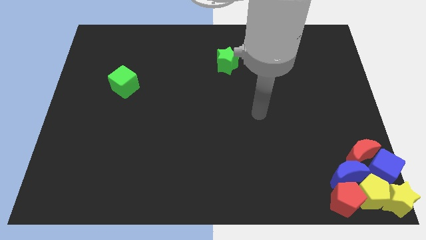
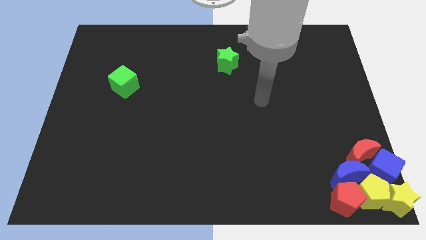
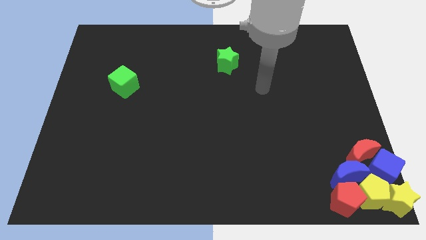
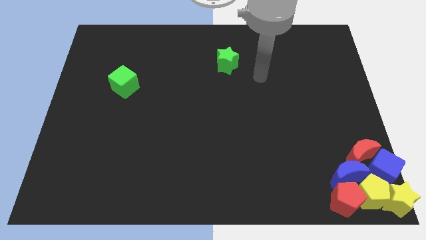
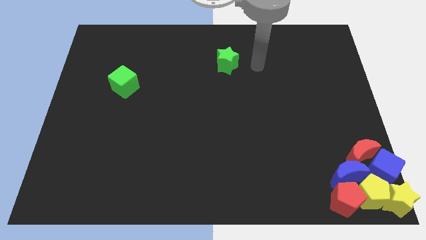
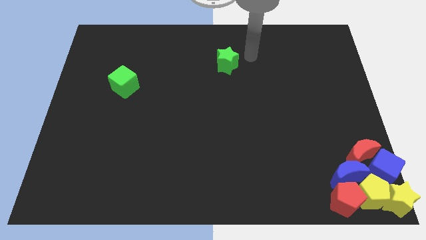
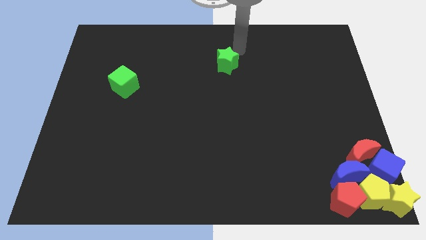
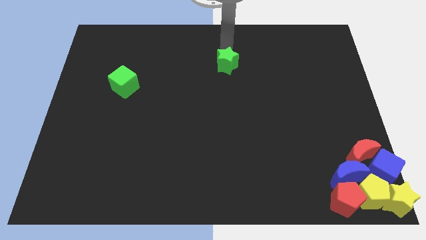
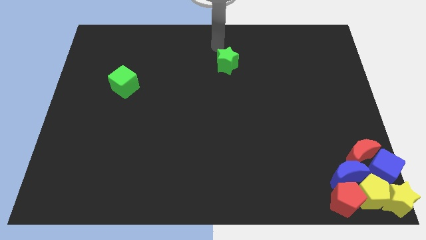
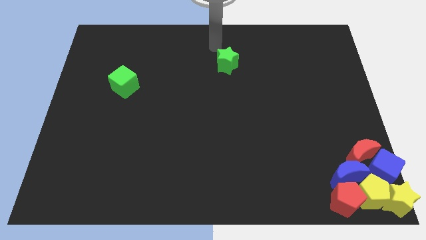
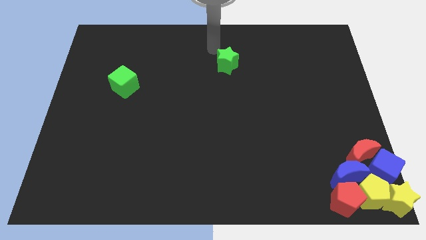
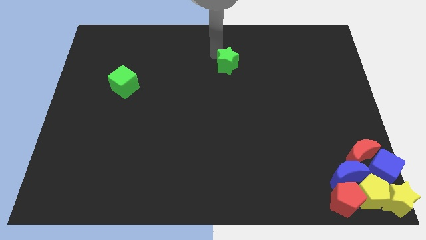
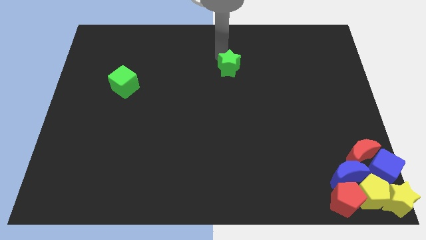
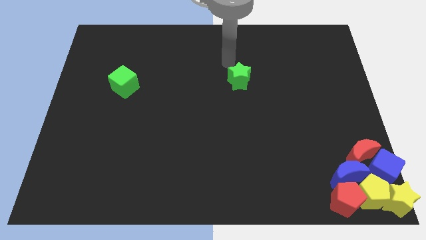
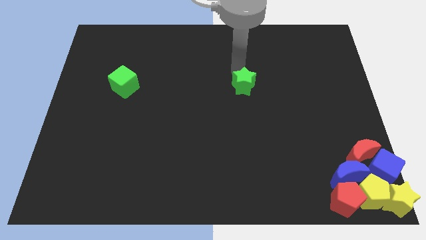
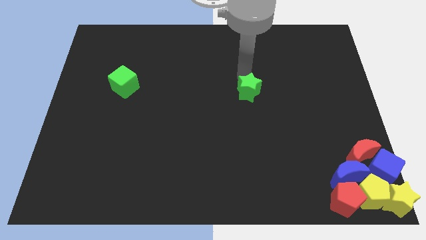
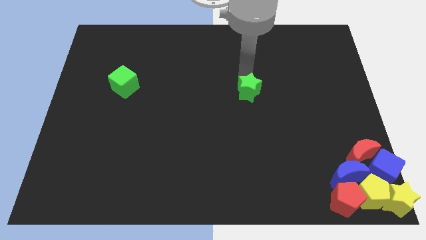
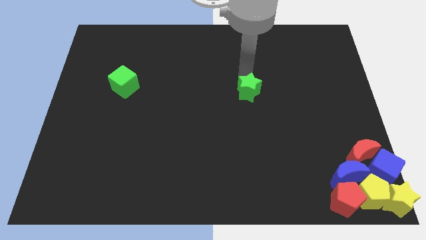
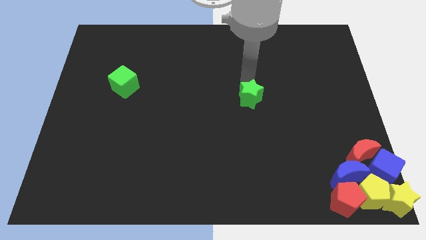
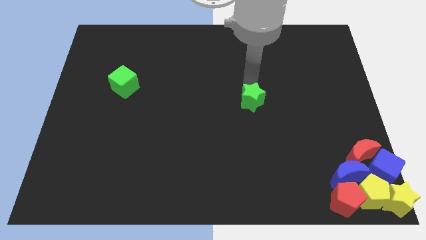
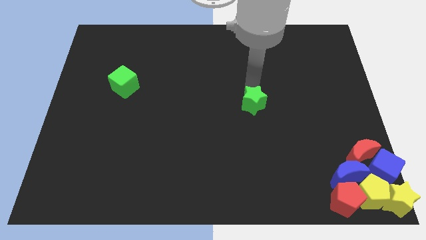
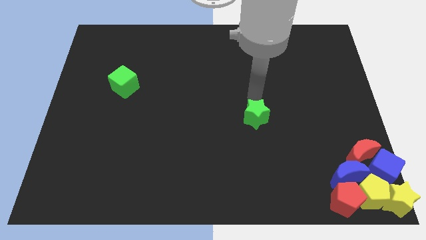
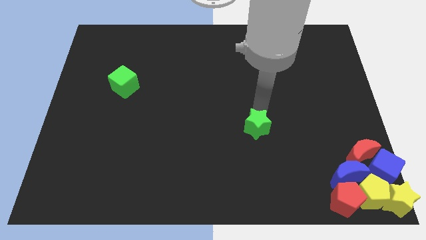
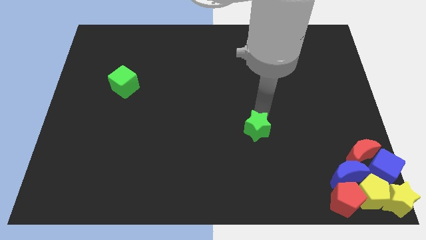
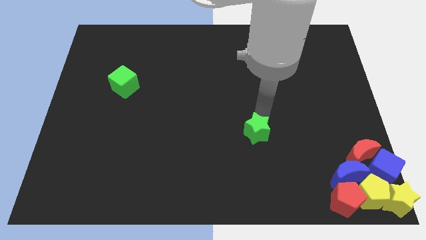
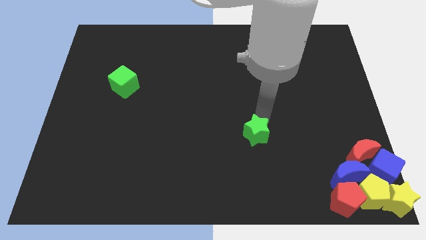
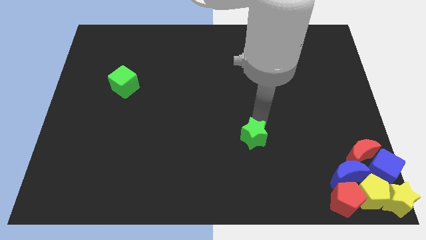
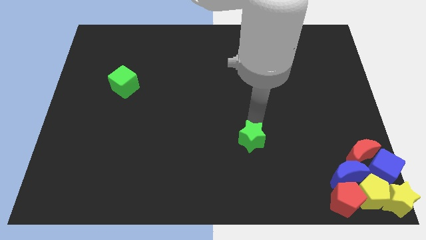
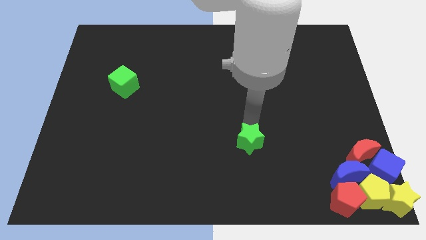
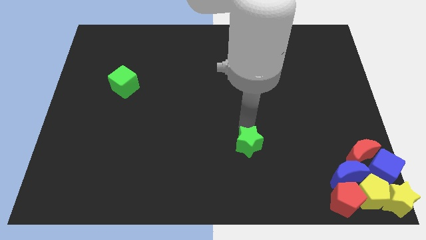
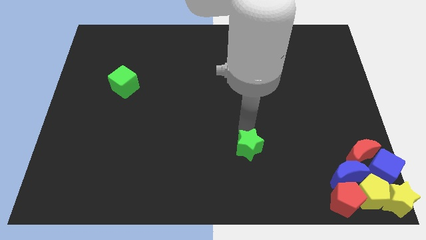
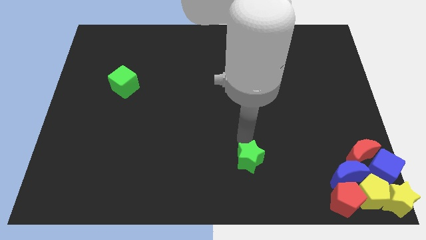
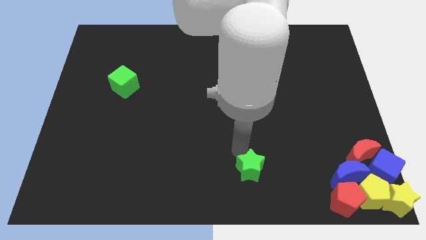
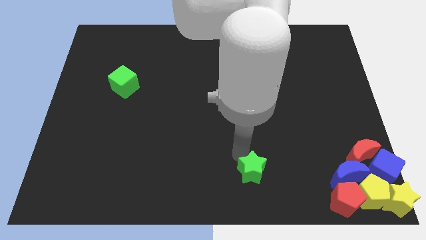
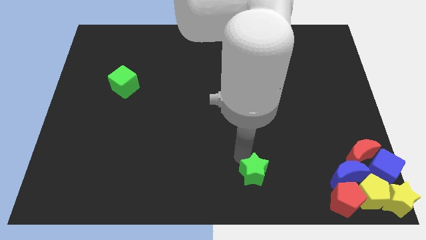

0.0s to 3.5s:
push the green star towards the bottom side

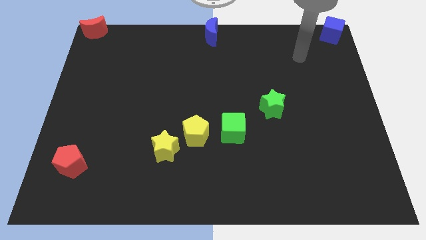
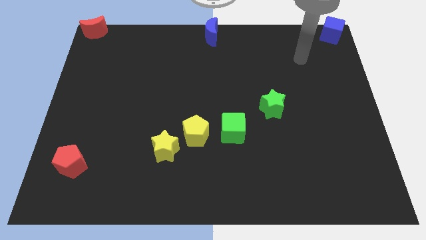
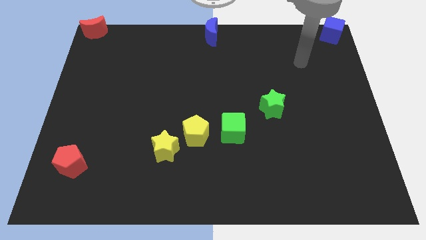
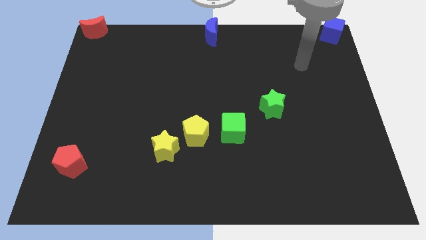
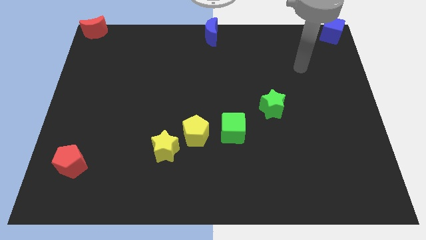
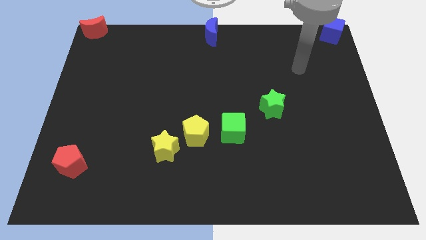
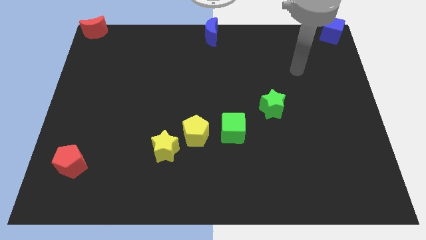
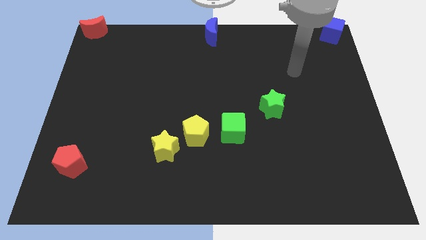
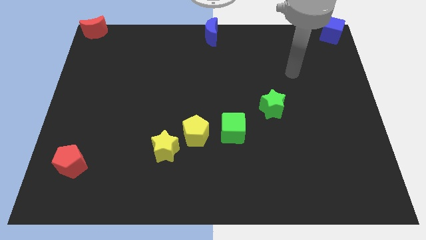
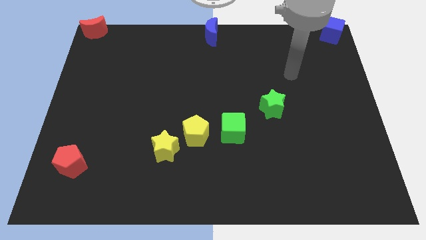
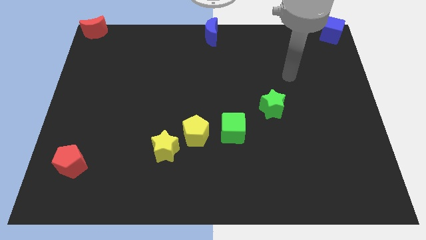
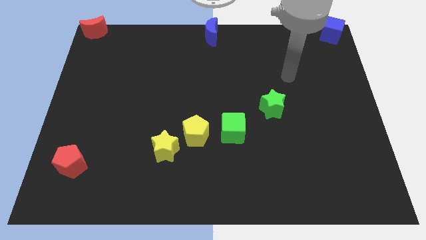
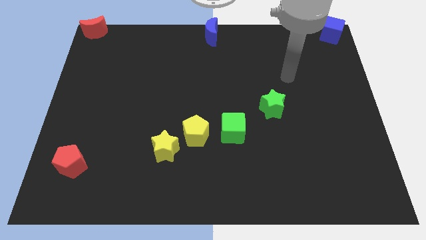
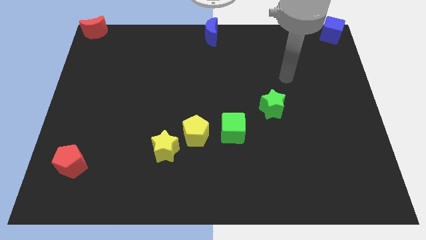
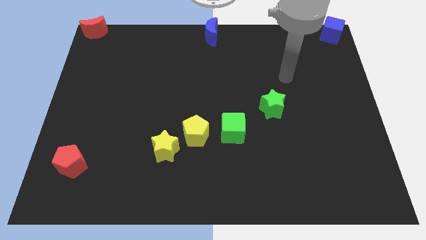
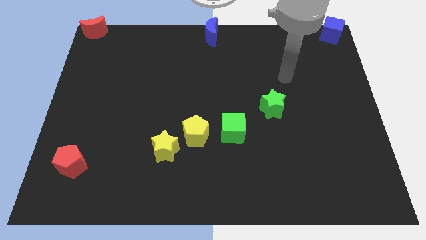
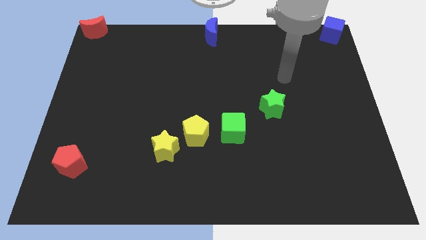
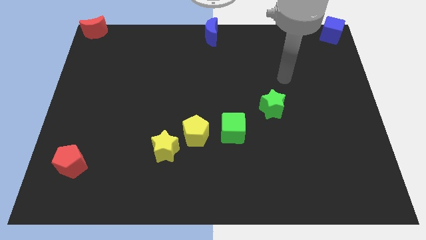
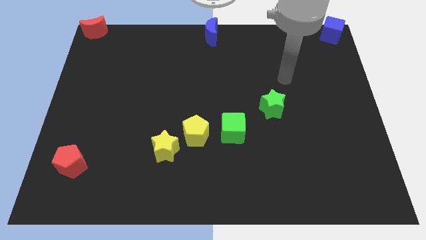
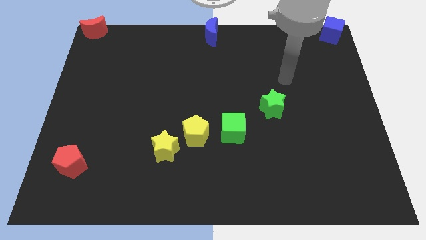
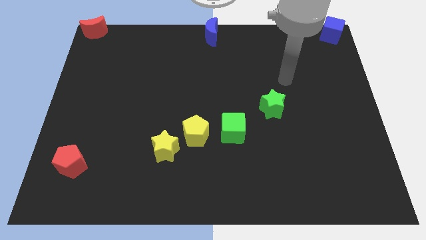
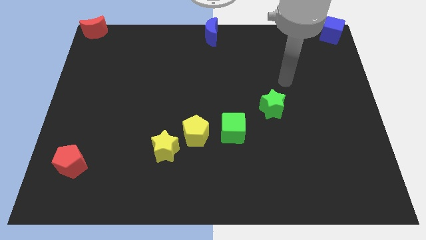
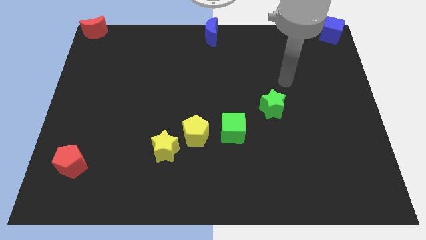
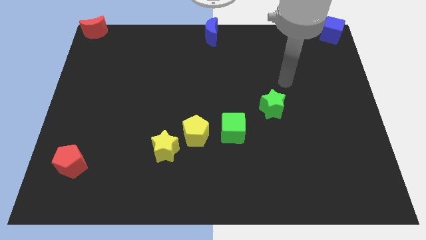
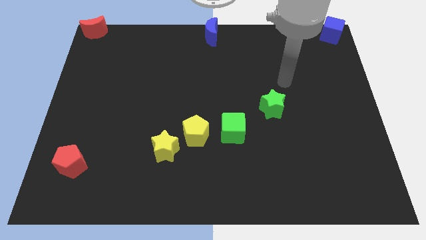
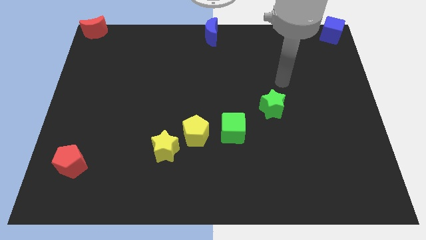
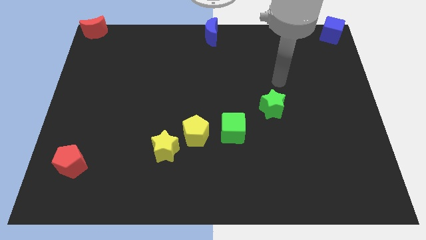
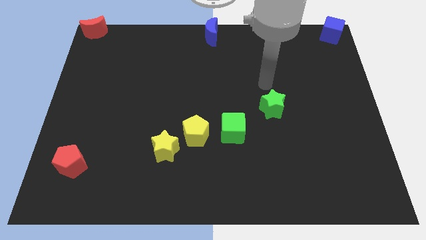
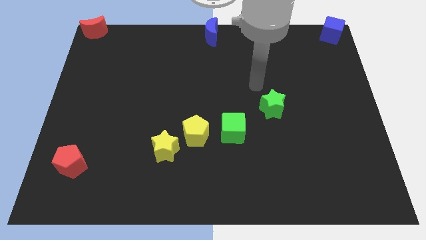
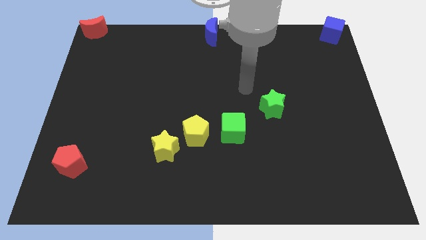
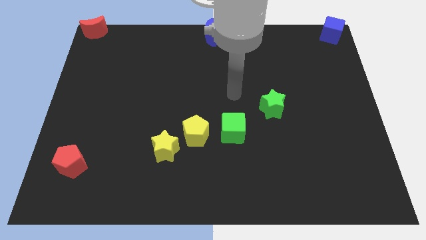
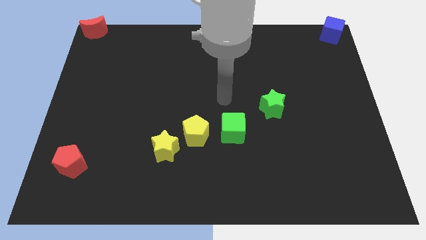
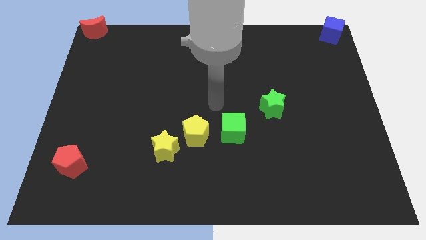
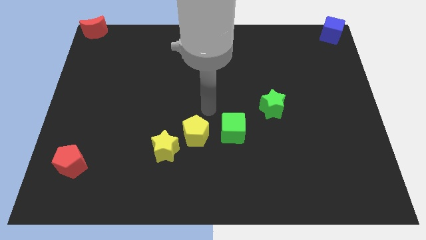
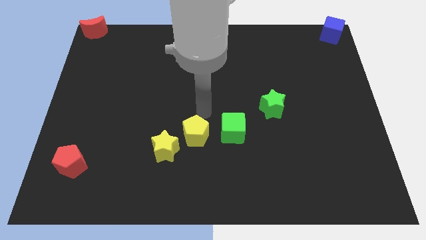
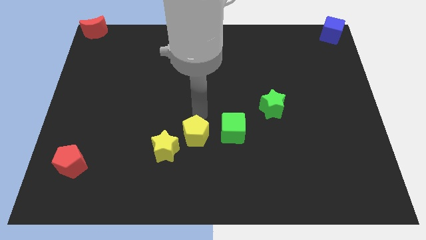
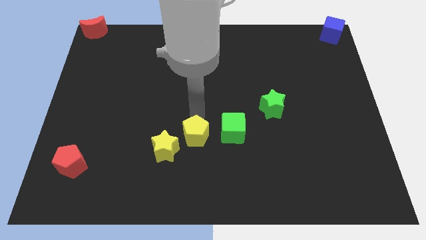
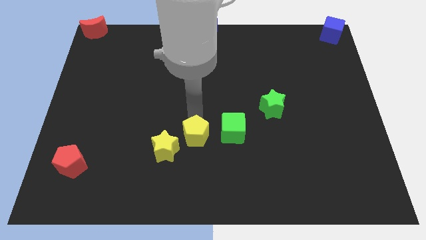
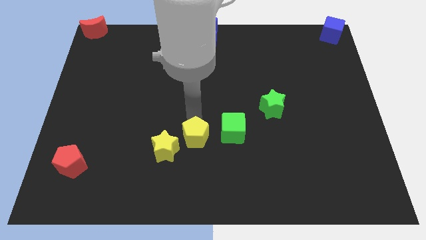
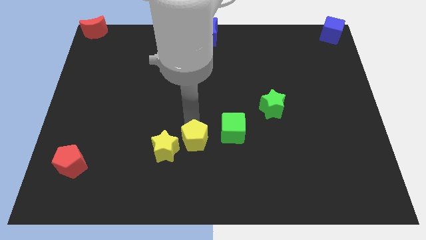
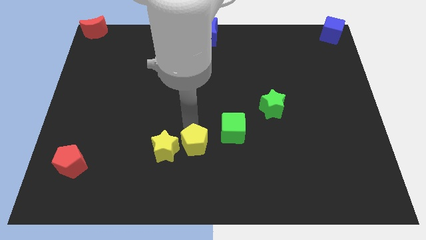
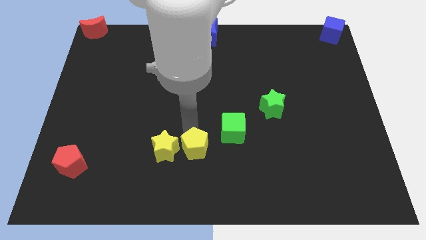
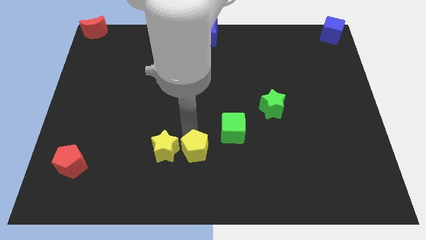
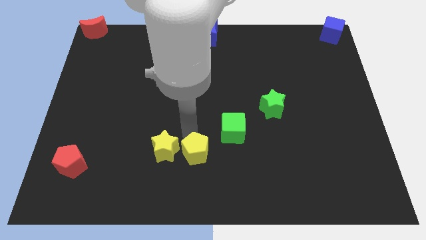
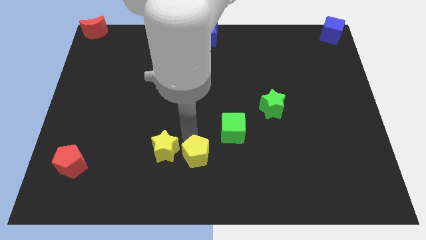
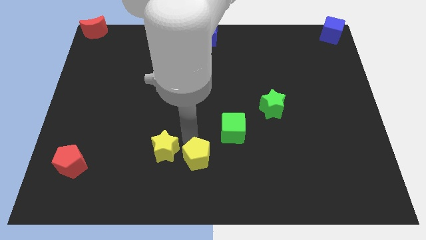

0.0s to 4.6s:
go near yello pentagon

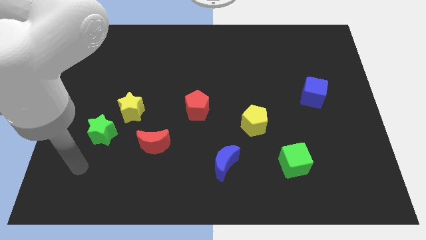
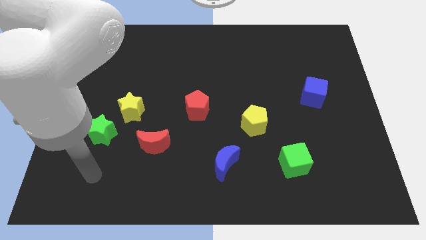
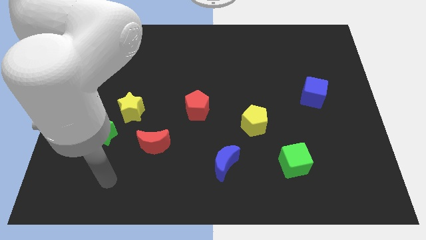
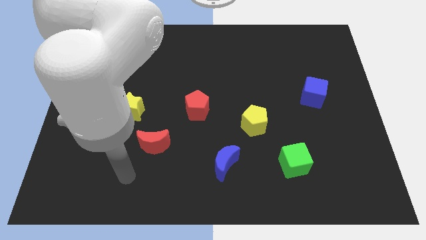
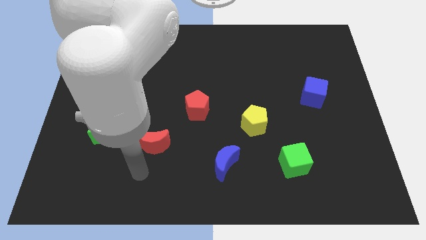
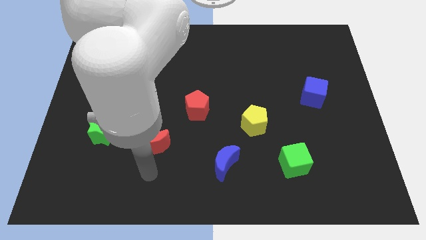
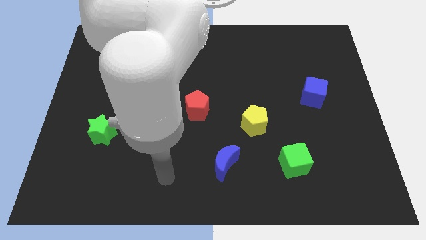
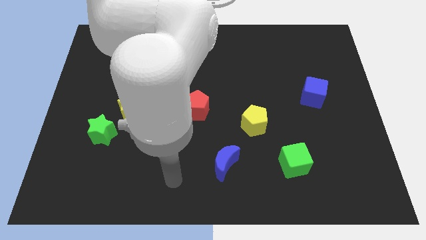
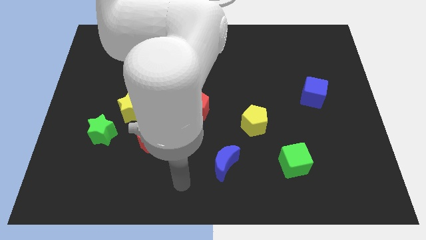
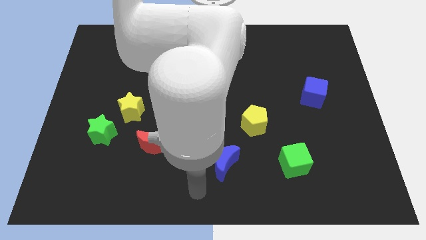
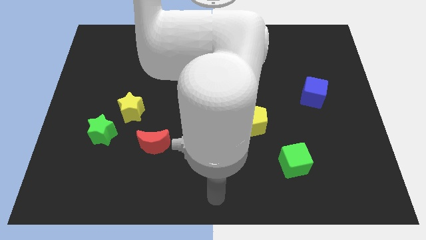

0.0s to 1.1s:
point your arm below the blue moon
